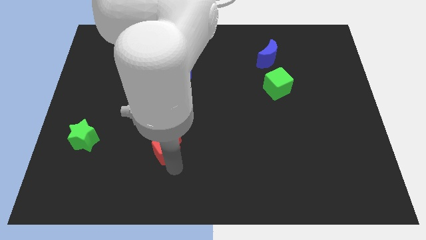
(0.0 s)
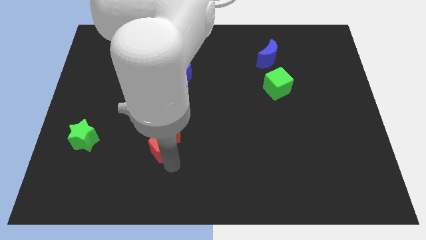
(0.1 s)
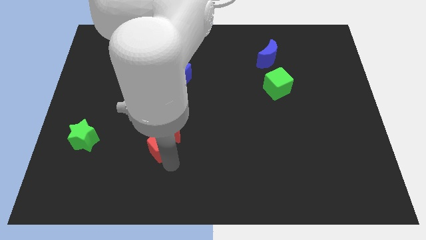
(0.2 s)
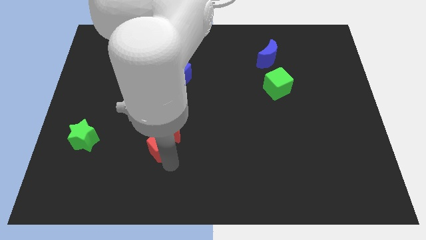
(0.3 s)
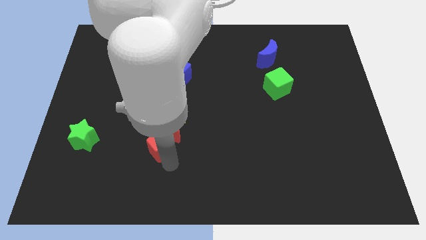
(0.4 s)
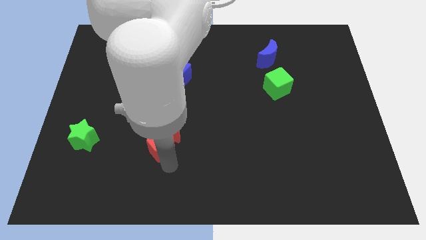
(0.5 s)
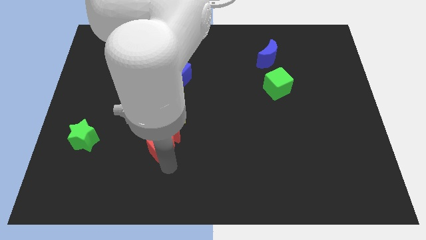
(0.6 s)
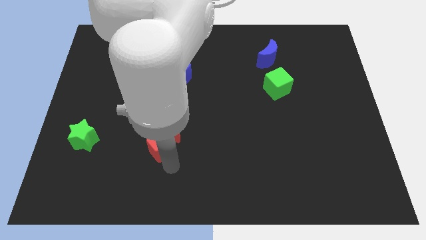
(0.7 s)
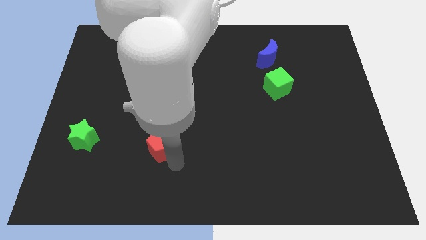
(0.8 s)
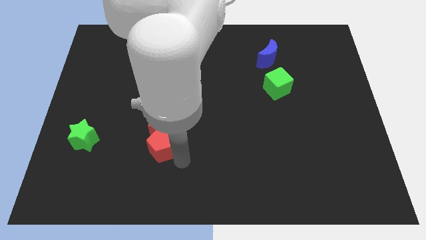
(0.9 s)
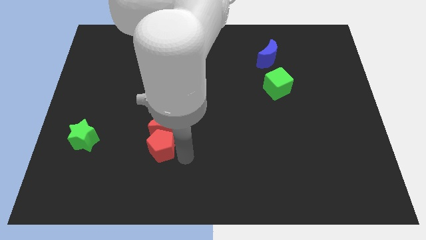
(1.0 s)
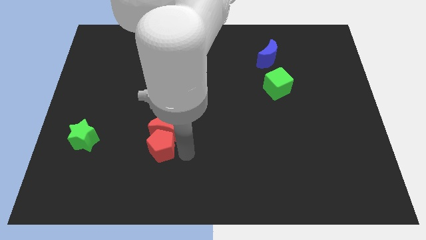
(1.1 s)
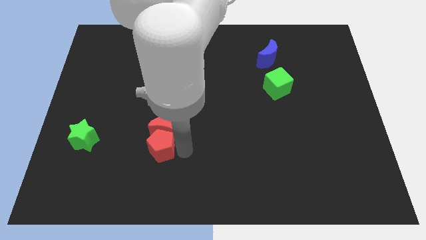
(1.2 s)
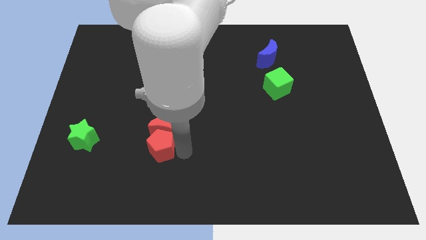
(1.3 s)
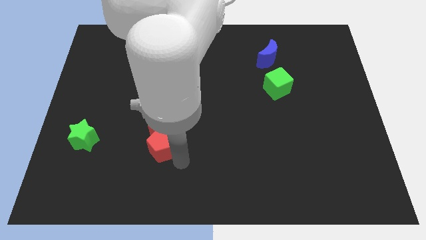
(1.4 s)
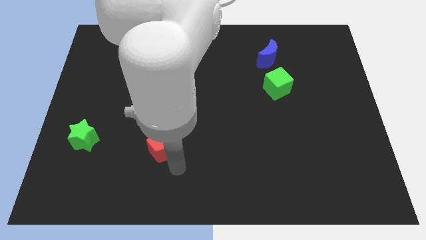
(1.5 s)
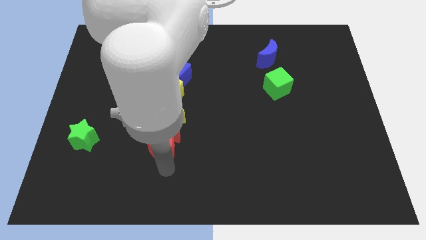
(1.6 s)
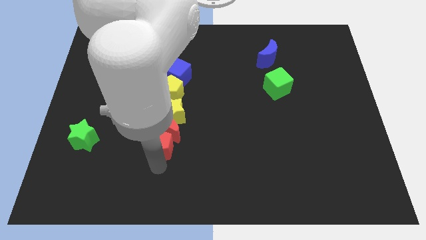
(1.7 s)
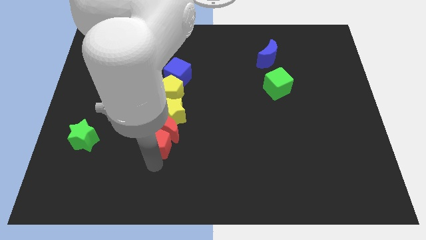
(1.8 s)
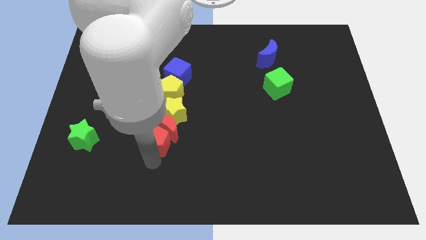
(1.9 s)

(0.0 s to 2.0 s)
push red pentagon slightly upwards

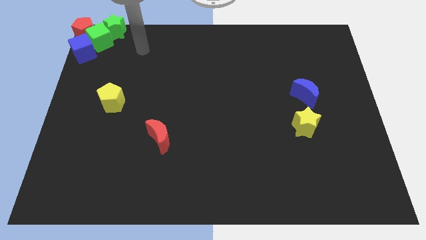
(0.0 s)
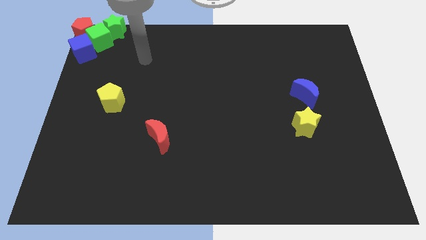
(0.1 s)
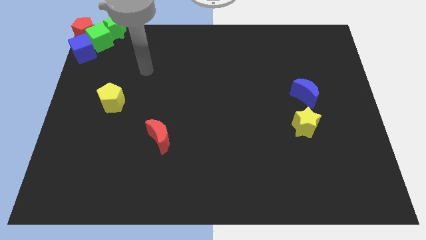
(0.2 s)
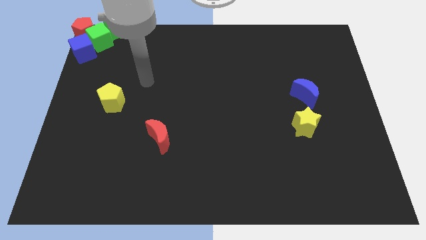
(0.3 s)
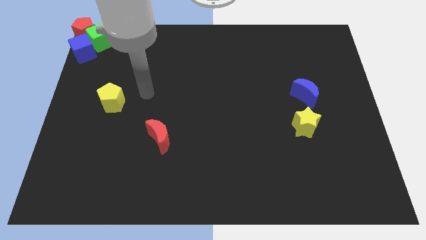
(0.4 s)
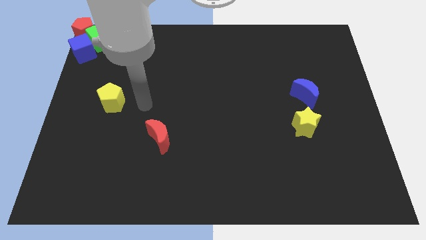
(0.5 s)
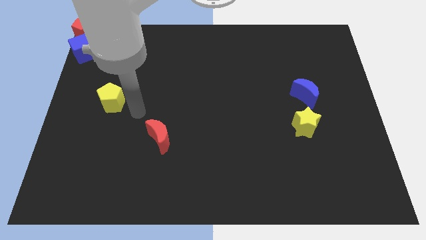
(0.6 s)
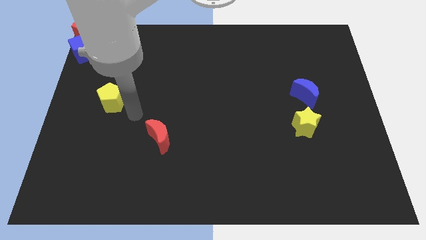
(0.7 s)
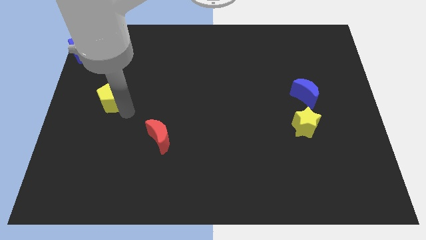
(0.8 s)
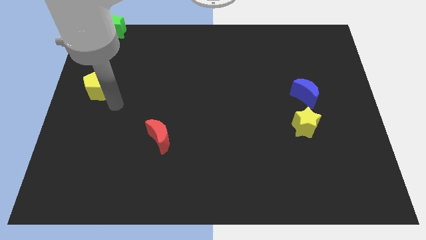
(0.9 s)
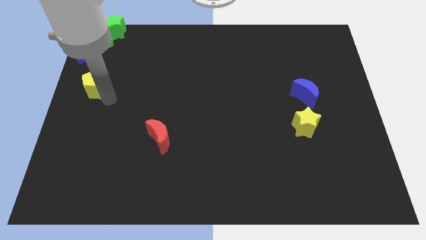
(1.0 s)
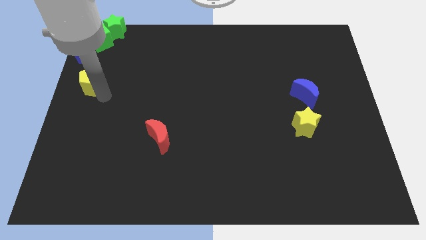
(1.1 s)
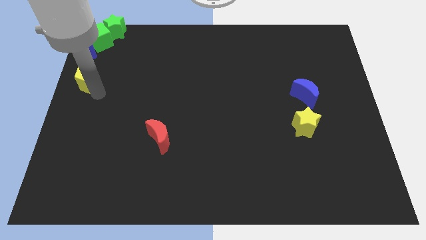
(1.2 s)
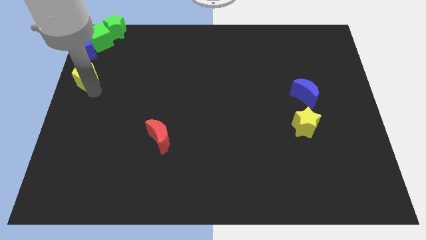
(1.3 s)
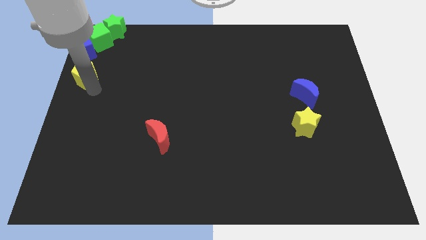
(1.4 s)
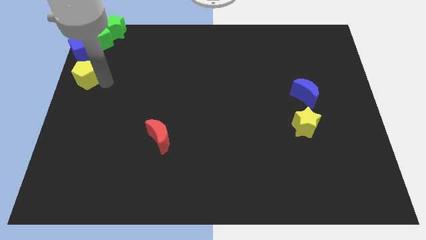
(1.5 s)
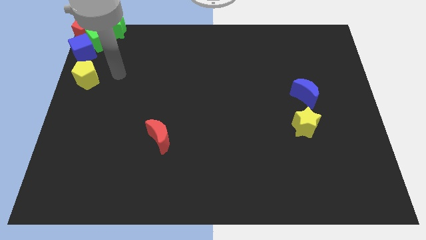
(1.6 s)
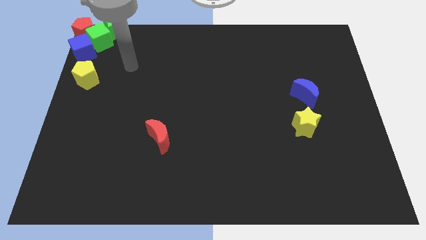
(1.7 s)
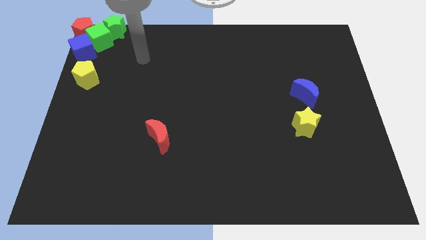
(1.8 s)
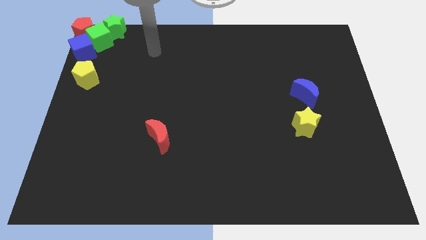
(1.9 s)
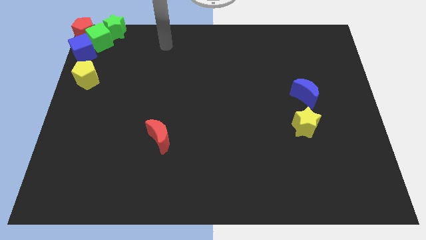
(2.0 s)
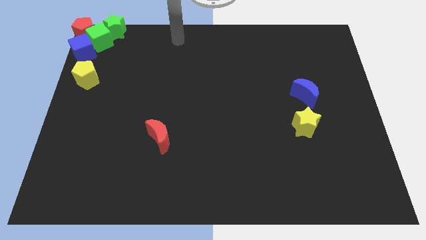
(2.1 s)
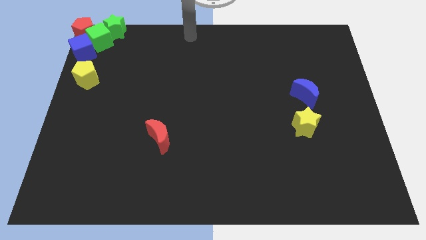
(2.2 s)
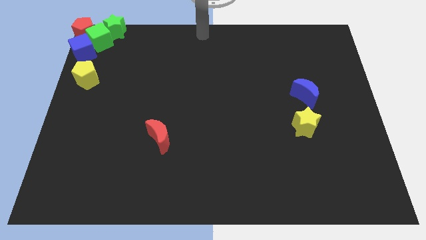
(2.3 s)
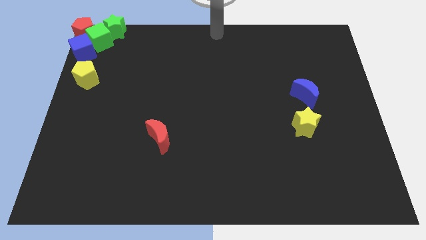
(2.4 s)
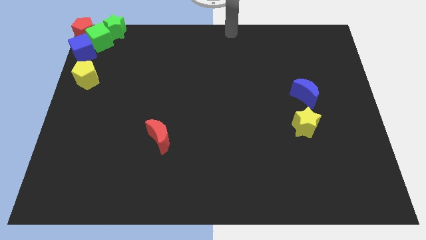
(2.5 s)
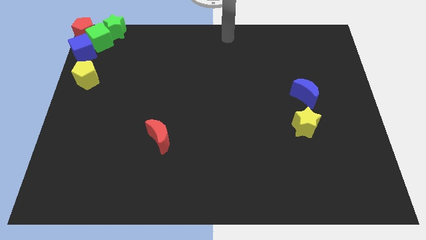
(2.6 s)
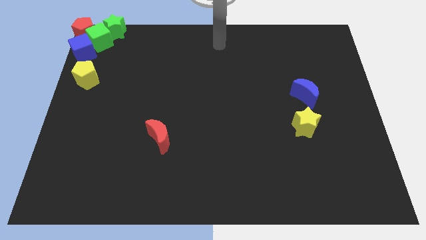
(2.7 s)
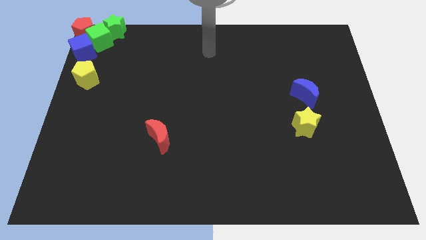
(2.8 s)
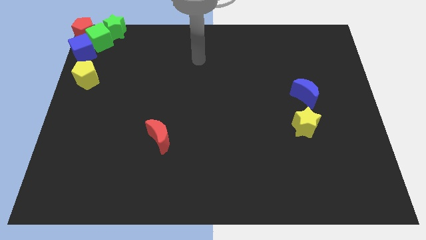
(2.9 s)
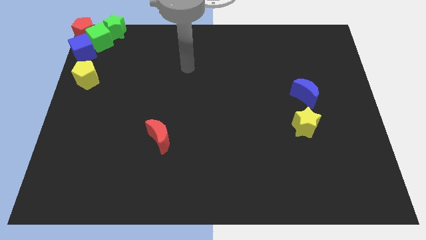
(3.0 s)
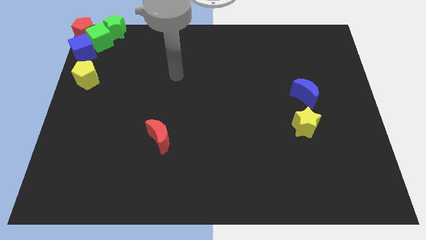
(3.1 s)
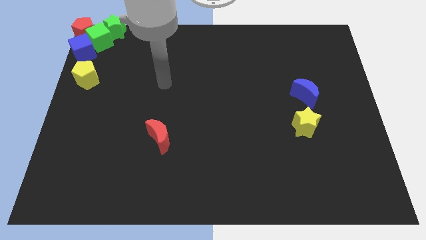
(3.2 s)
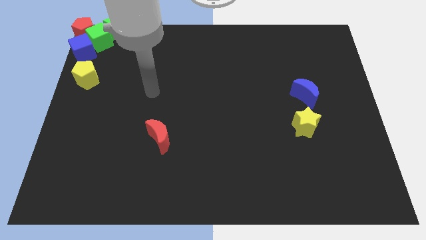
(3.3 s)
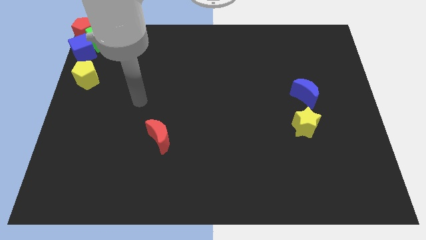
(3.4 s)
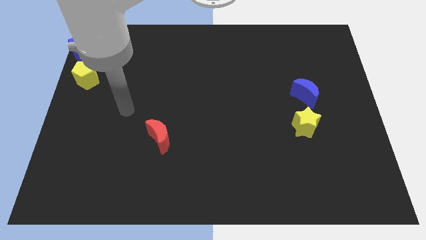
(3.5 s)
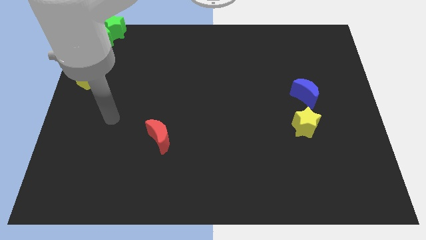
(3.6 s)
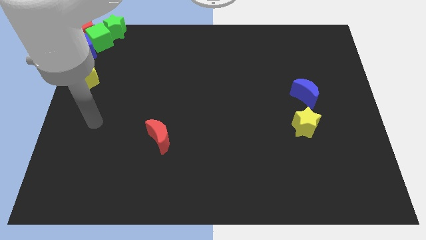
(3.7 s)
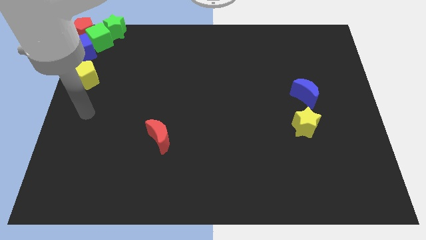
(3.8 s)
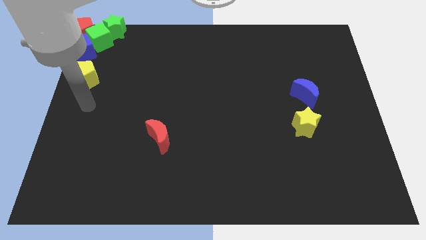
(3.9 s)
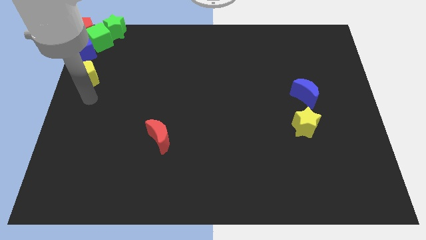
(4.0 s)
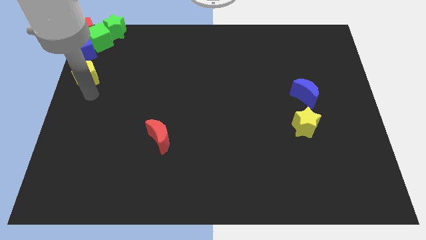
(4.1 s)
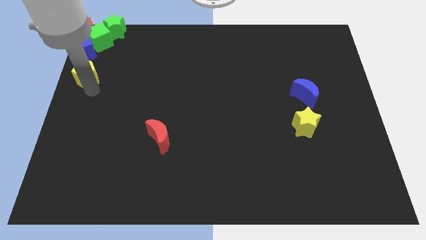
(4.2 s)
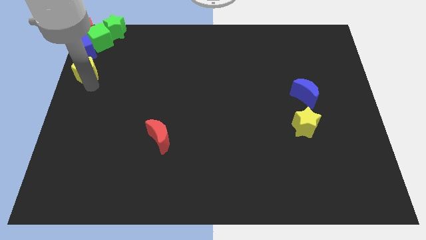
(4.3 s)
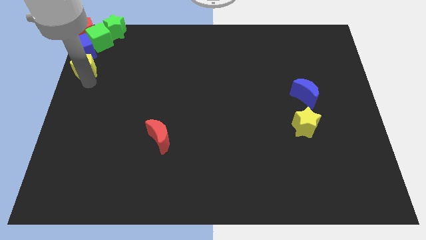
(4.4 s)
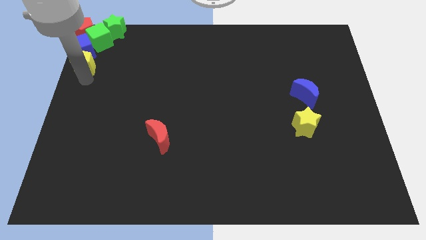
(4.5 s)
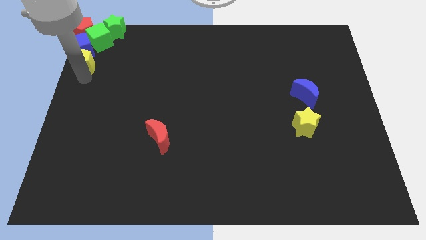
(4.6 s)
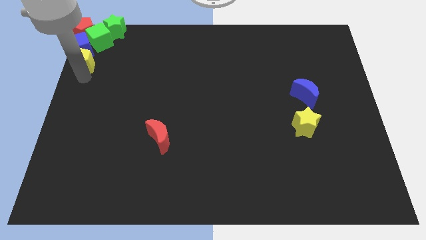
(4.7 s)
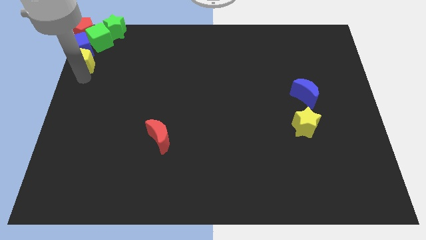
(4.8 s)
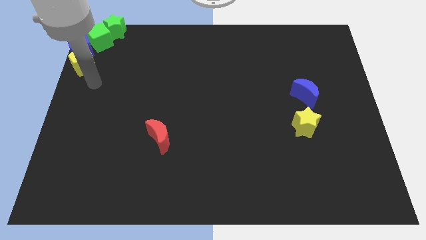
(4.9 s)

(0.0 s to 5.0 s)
drag the yellow pentagon to the bottom of the blue cube which is at the top left corner

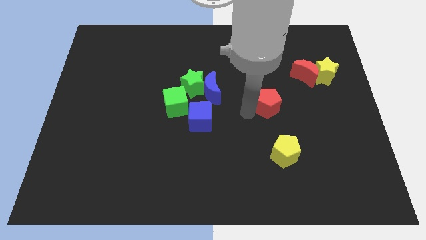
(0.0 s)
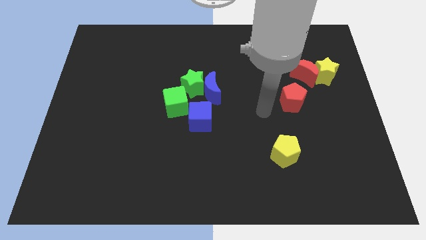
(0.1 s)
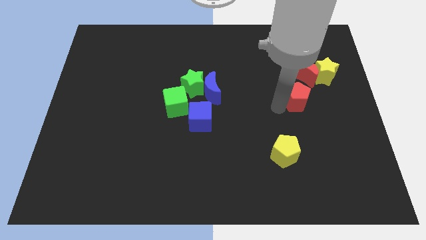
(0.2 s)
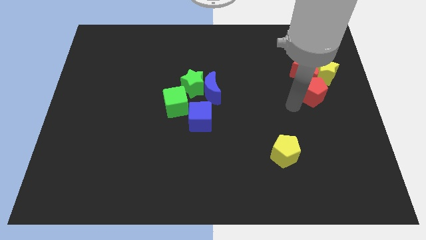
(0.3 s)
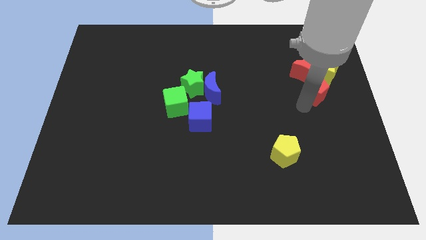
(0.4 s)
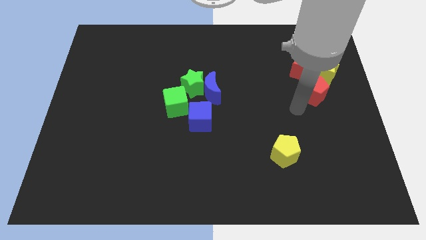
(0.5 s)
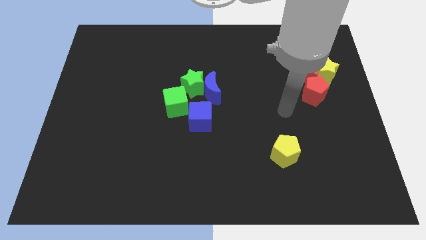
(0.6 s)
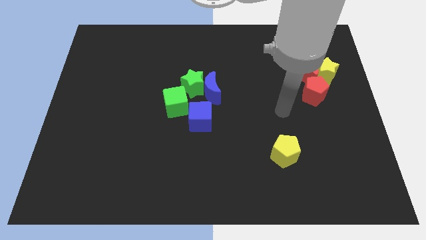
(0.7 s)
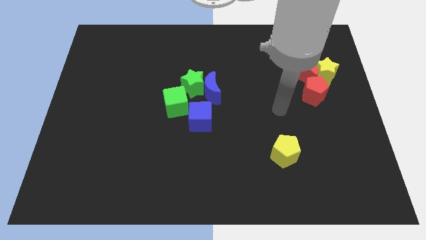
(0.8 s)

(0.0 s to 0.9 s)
move red pentagon right below the red moon

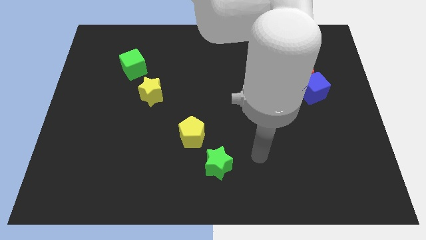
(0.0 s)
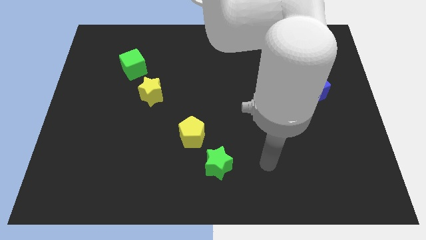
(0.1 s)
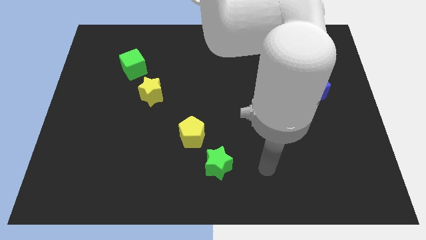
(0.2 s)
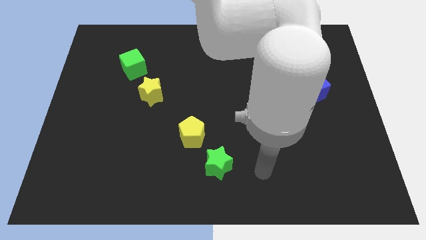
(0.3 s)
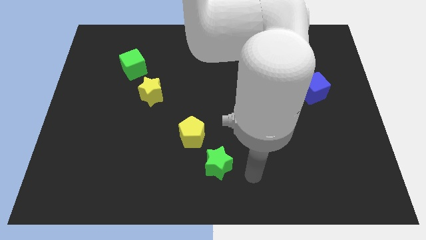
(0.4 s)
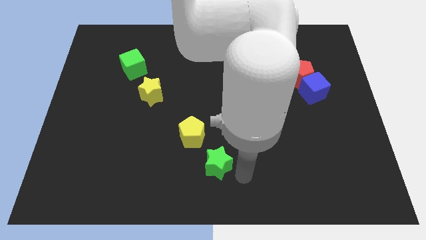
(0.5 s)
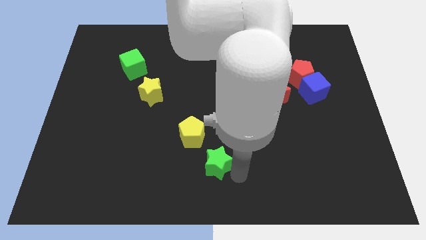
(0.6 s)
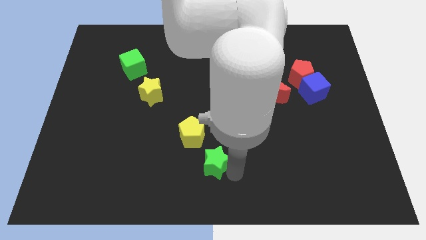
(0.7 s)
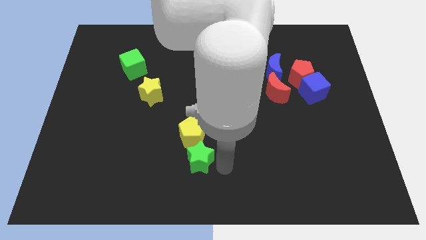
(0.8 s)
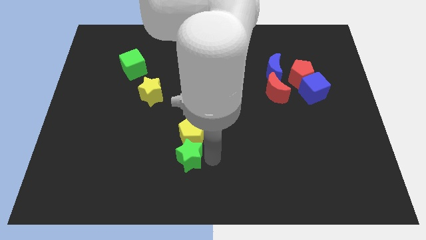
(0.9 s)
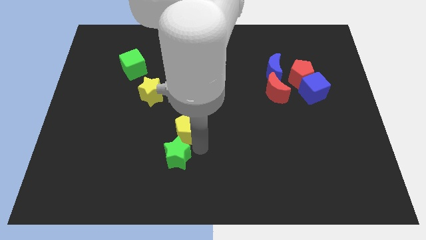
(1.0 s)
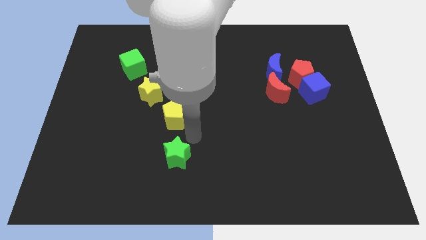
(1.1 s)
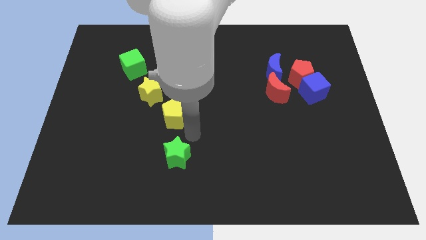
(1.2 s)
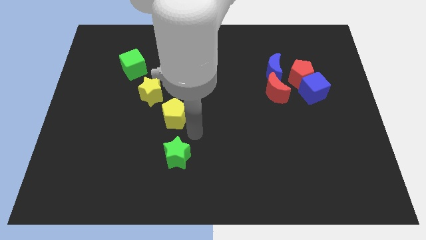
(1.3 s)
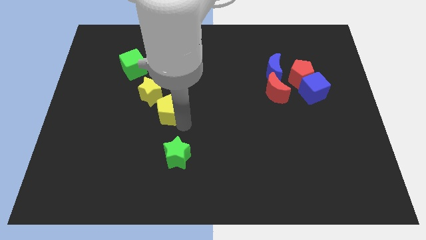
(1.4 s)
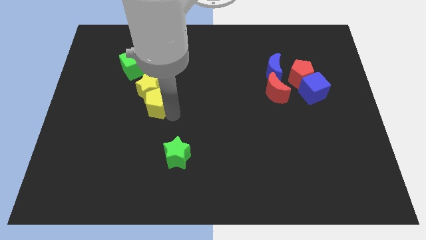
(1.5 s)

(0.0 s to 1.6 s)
move the yellow blocks diagonally below the green cube
